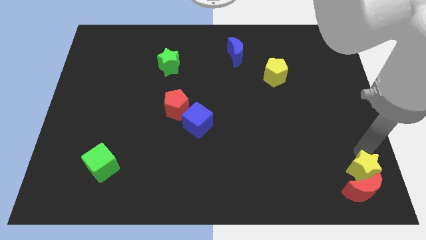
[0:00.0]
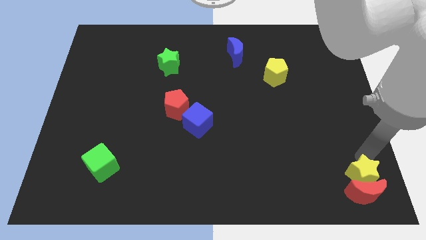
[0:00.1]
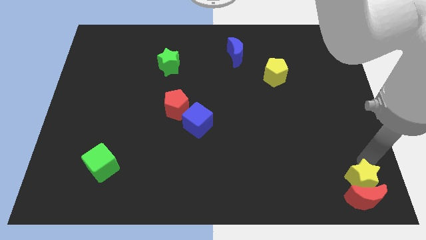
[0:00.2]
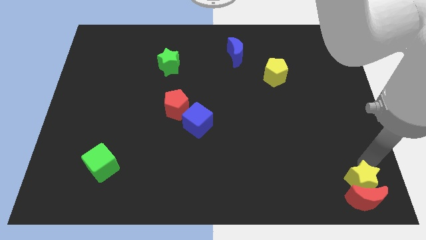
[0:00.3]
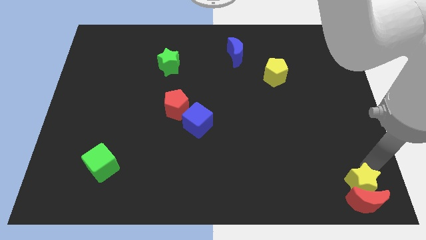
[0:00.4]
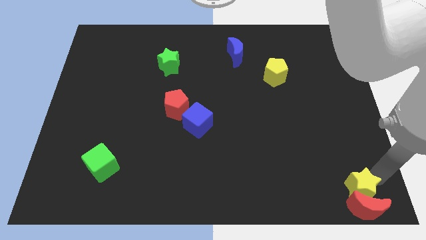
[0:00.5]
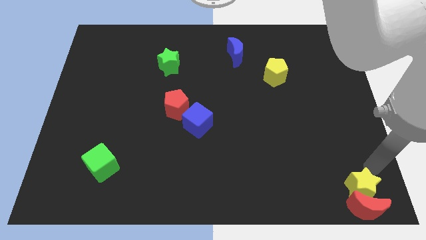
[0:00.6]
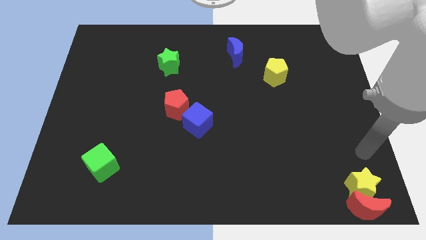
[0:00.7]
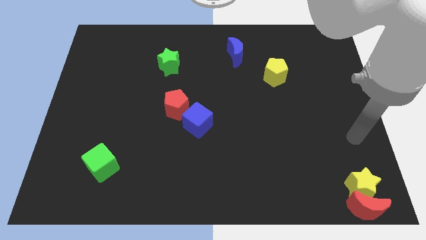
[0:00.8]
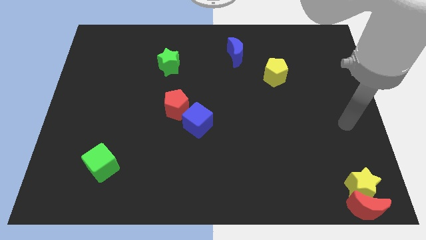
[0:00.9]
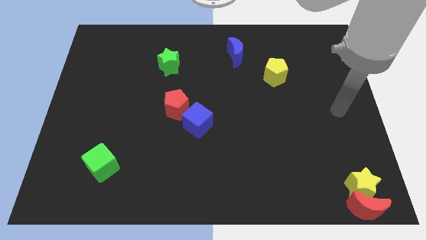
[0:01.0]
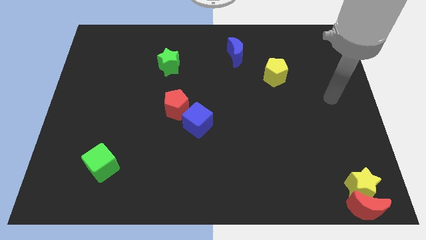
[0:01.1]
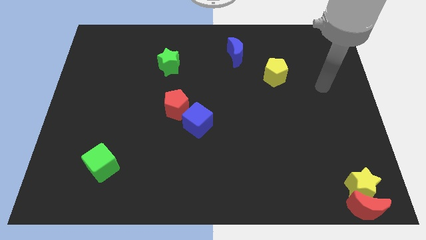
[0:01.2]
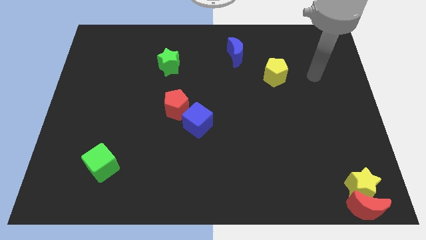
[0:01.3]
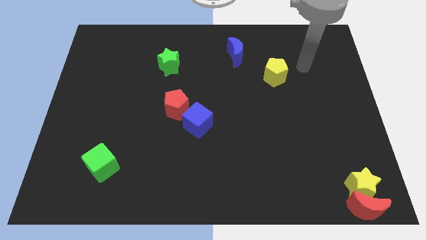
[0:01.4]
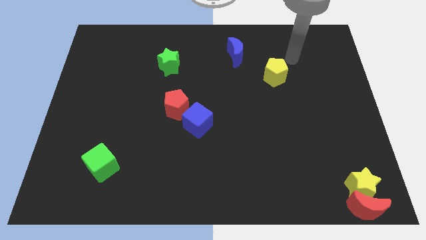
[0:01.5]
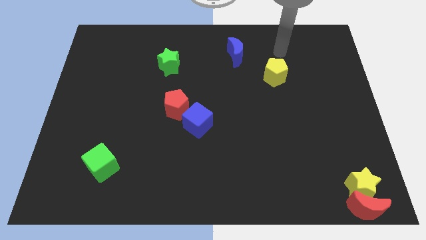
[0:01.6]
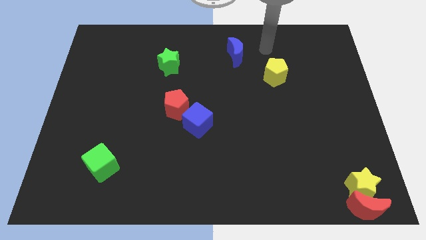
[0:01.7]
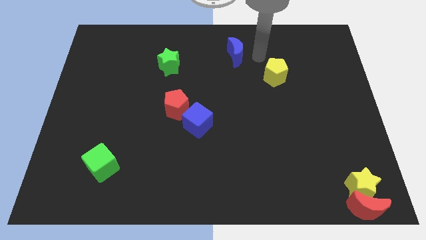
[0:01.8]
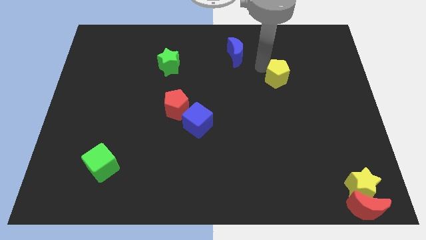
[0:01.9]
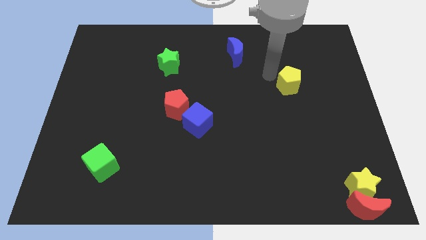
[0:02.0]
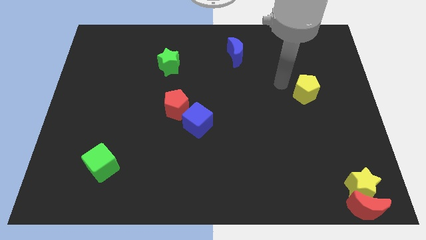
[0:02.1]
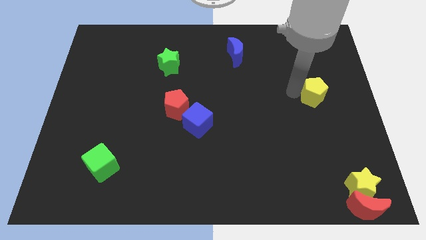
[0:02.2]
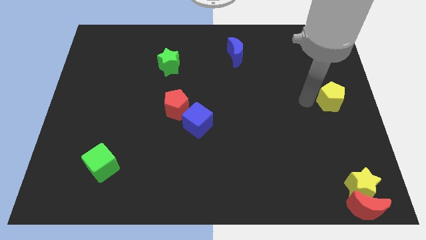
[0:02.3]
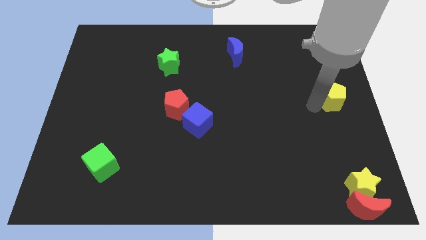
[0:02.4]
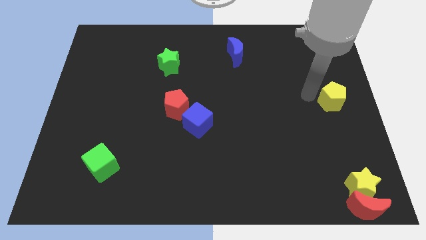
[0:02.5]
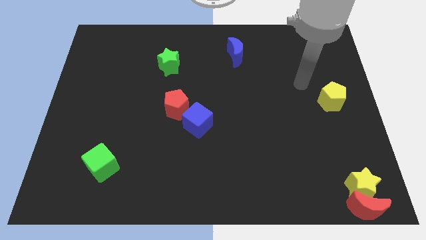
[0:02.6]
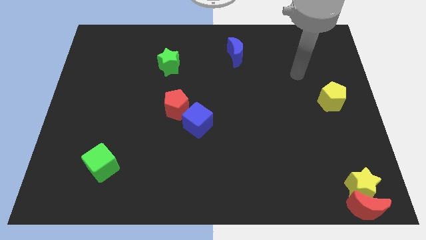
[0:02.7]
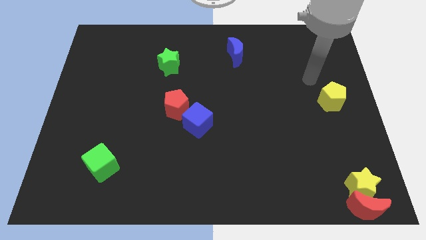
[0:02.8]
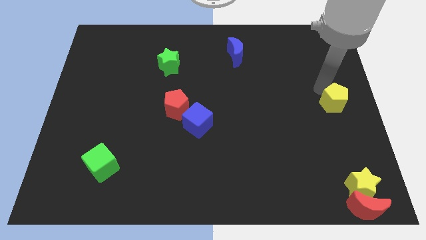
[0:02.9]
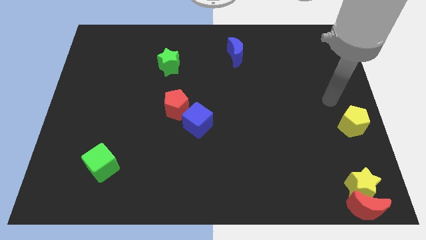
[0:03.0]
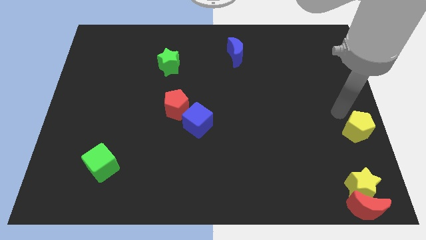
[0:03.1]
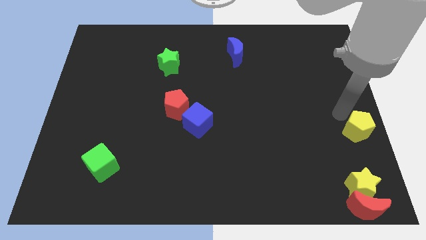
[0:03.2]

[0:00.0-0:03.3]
move the yellow pentagon towards the bottom of the board

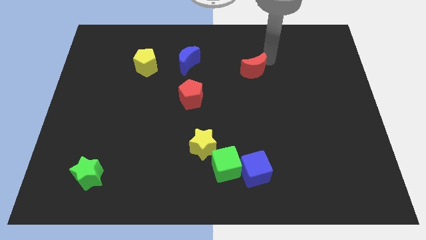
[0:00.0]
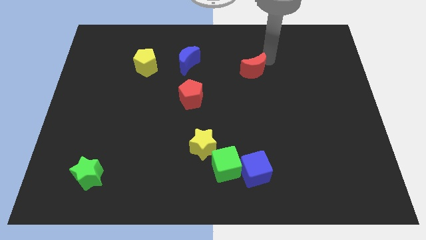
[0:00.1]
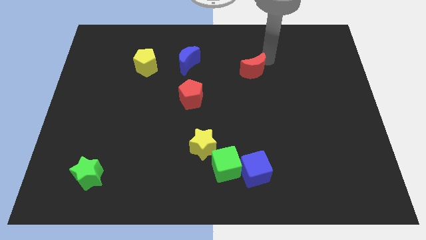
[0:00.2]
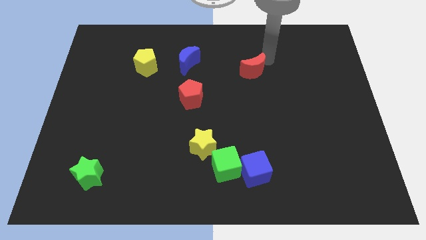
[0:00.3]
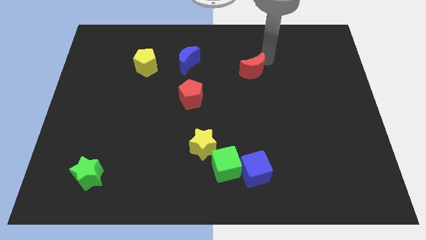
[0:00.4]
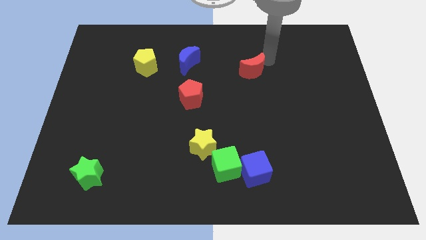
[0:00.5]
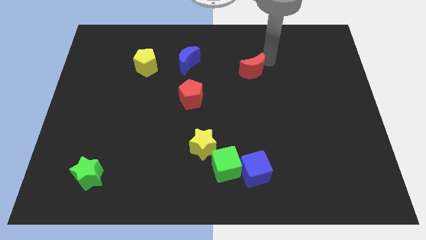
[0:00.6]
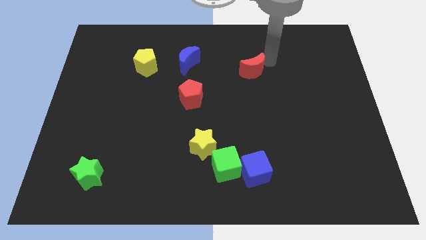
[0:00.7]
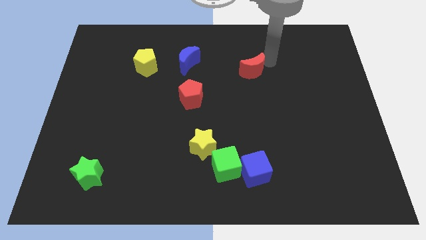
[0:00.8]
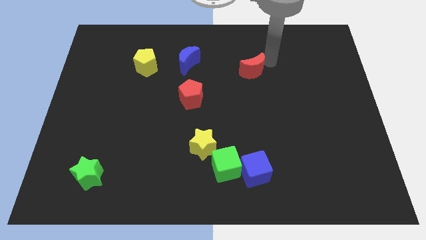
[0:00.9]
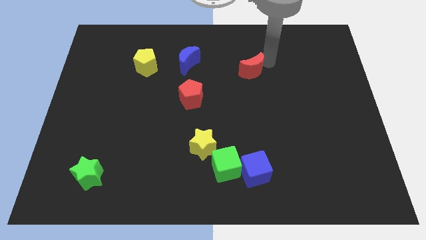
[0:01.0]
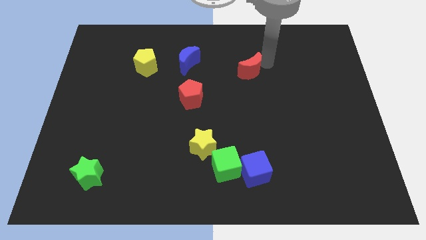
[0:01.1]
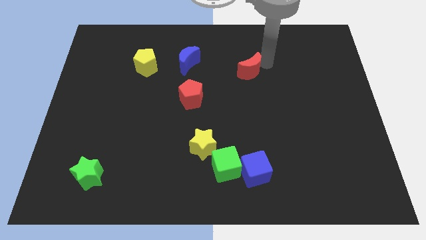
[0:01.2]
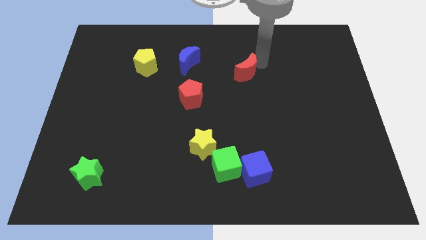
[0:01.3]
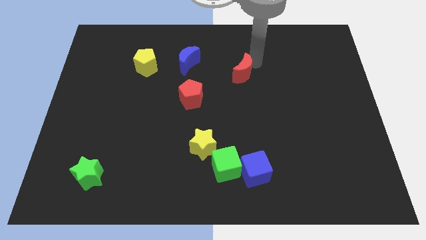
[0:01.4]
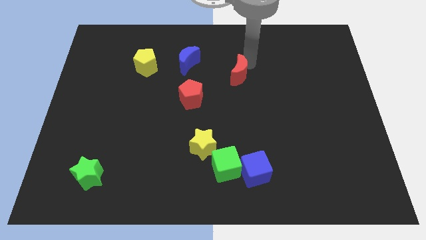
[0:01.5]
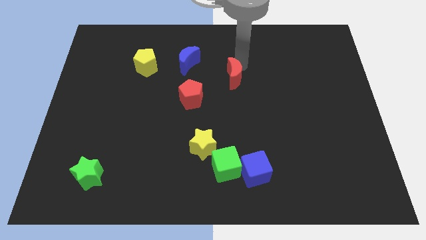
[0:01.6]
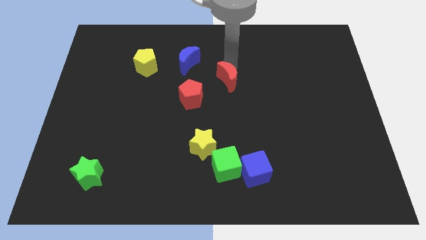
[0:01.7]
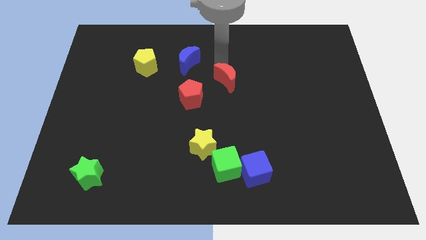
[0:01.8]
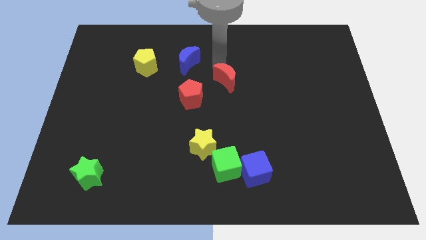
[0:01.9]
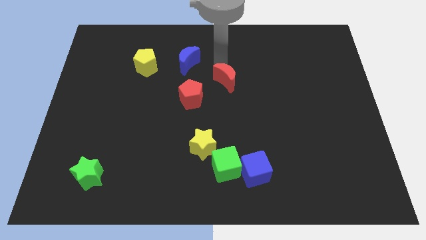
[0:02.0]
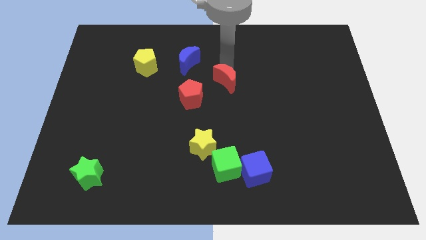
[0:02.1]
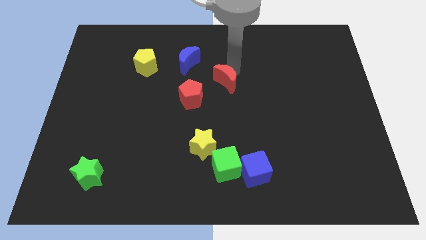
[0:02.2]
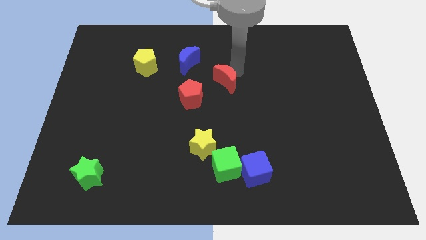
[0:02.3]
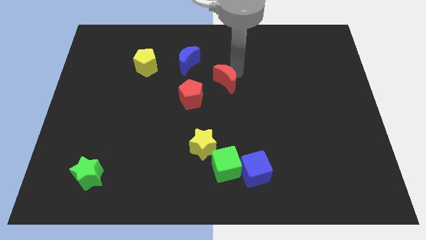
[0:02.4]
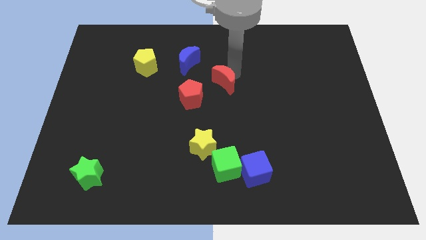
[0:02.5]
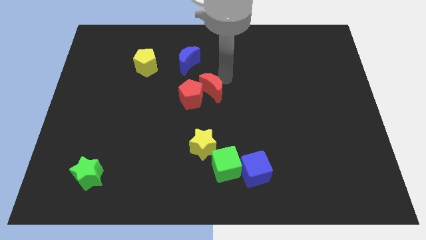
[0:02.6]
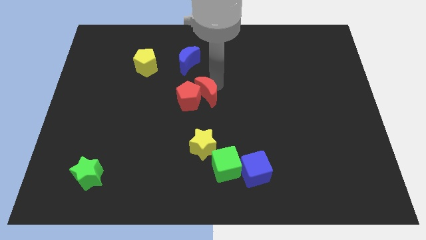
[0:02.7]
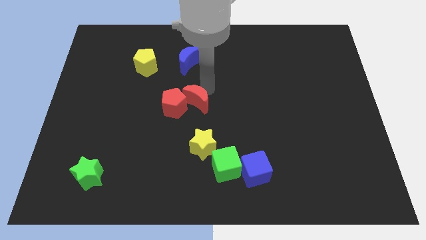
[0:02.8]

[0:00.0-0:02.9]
push red crescent above green cube

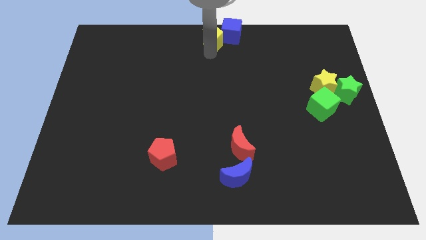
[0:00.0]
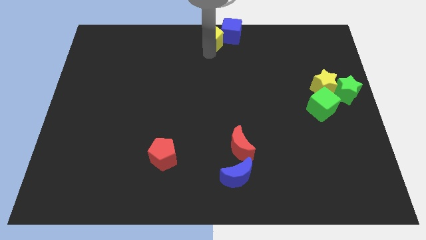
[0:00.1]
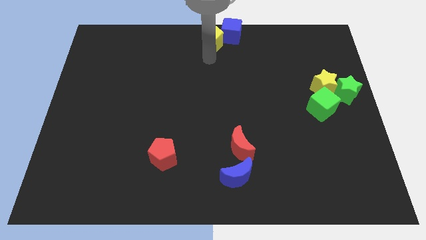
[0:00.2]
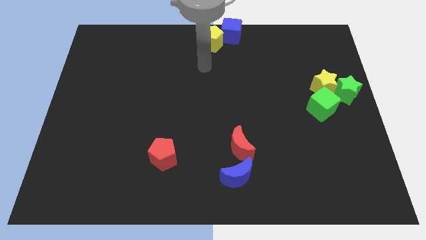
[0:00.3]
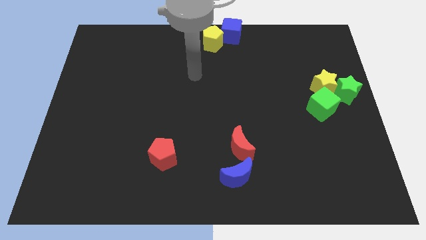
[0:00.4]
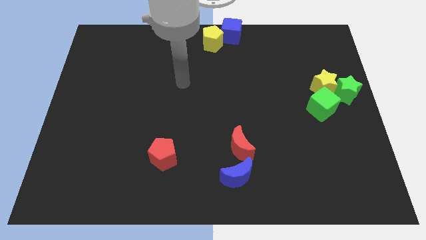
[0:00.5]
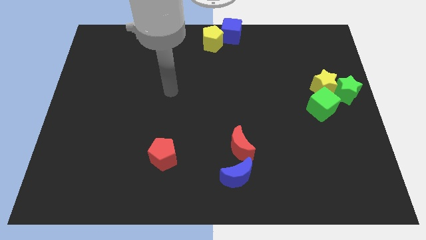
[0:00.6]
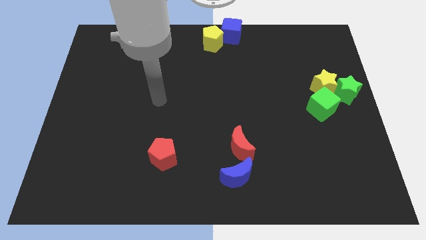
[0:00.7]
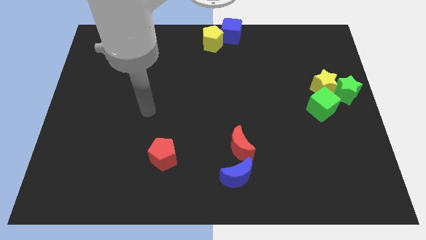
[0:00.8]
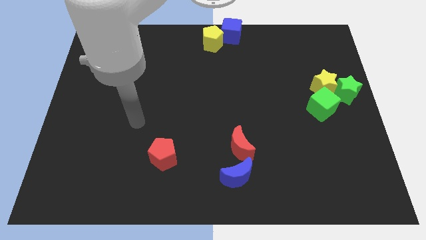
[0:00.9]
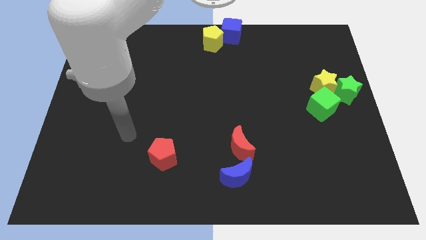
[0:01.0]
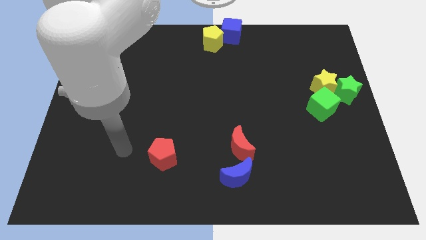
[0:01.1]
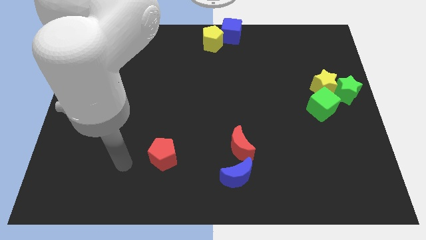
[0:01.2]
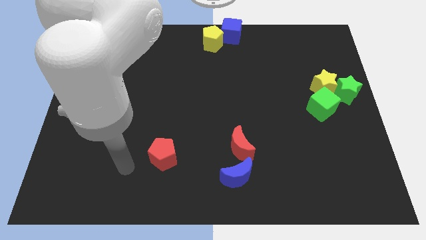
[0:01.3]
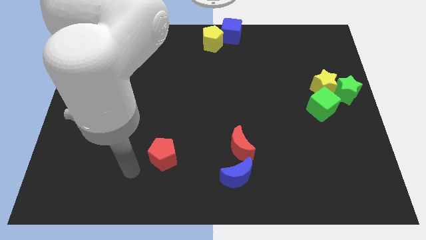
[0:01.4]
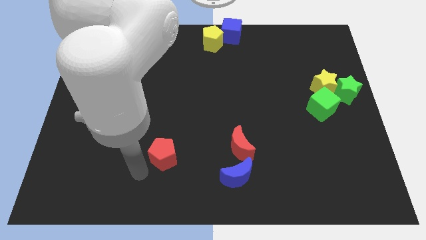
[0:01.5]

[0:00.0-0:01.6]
move your hand away from the yellow pentagon

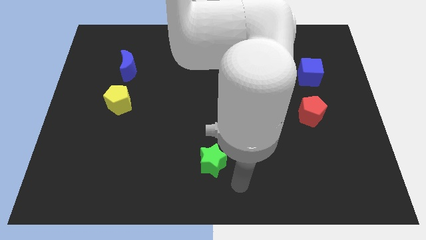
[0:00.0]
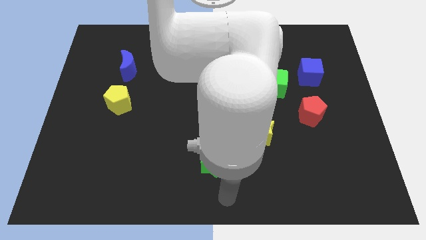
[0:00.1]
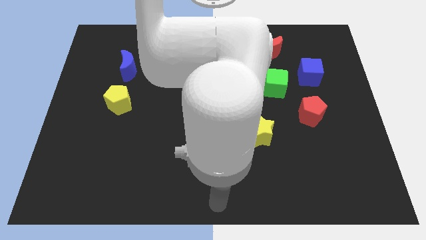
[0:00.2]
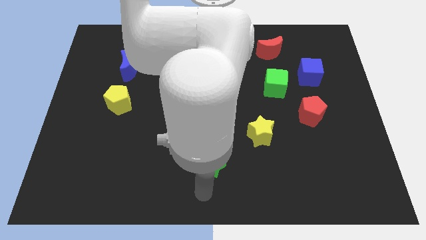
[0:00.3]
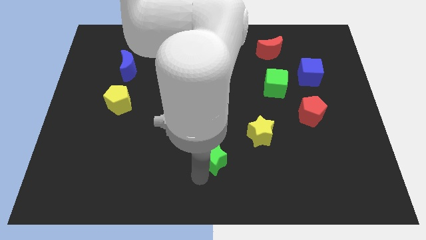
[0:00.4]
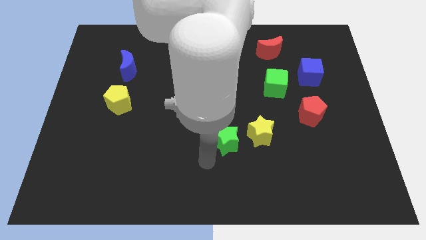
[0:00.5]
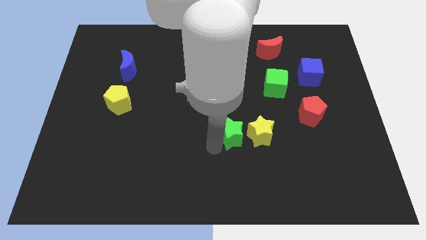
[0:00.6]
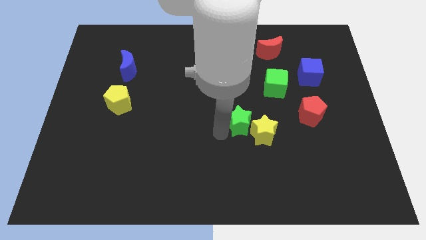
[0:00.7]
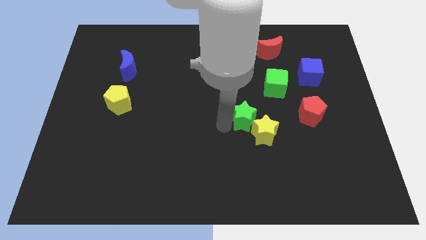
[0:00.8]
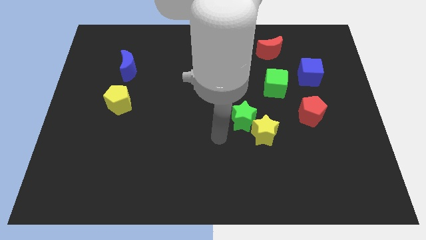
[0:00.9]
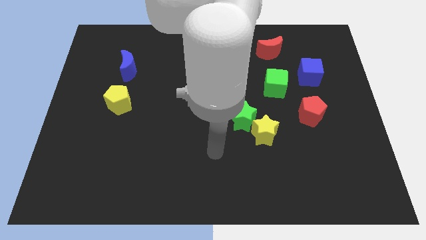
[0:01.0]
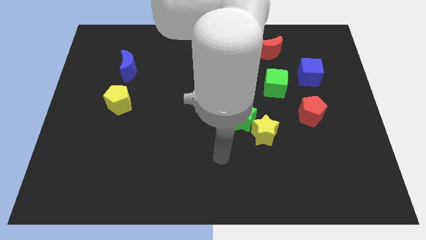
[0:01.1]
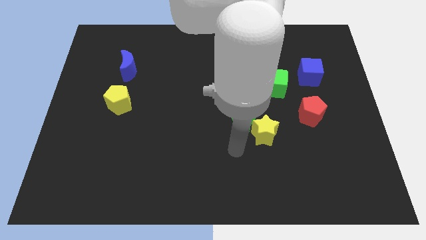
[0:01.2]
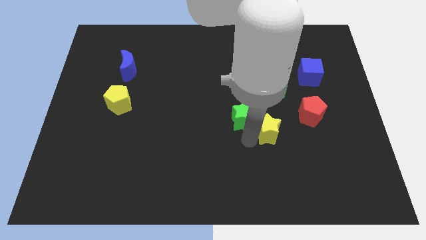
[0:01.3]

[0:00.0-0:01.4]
place the green star to the left side of the yellow star
